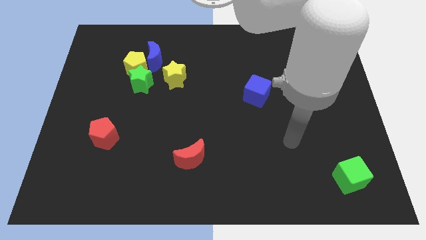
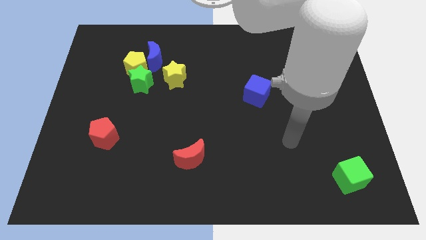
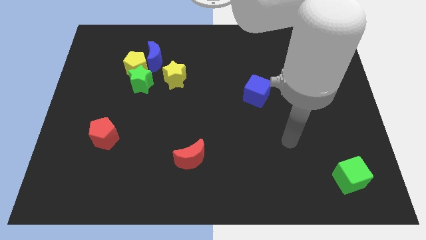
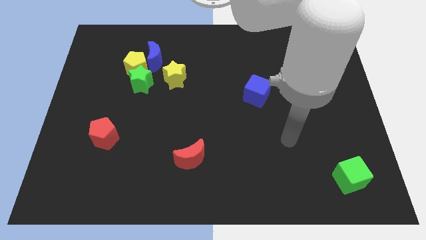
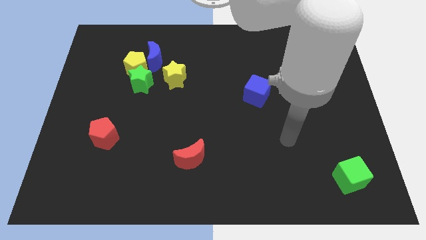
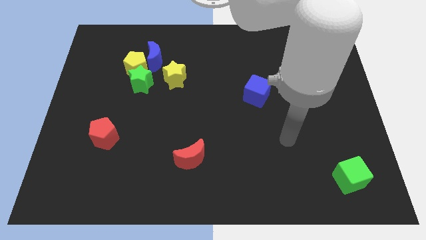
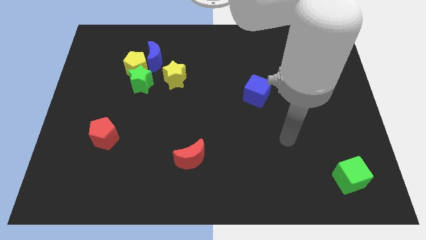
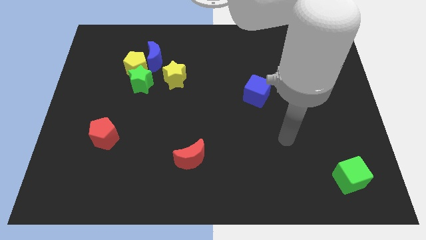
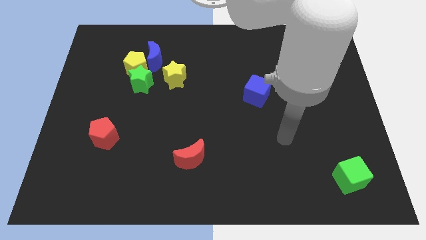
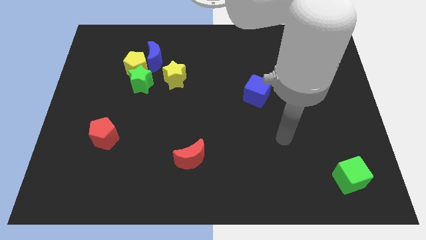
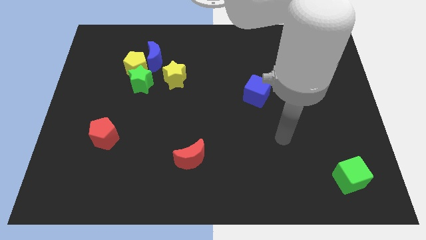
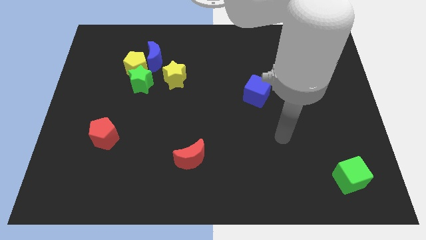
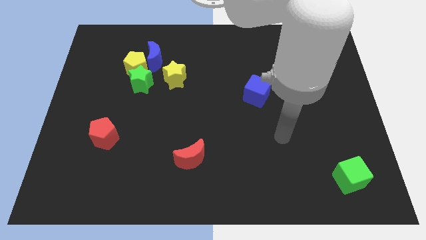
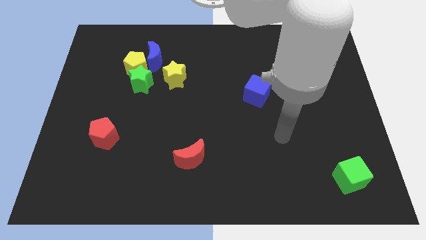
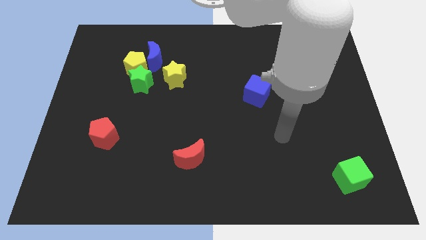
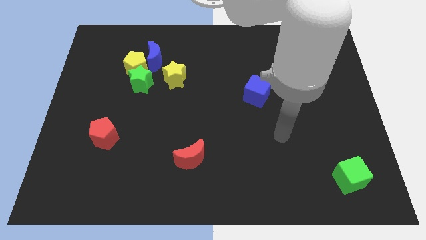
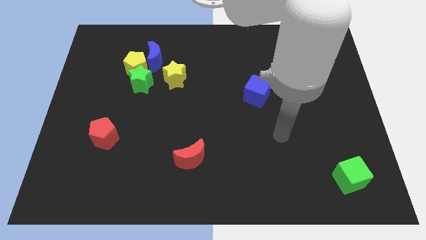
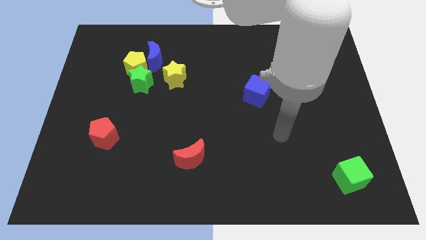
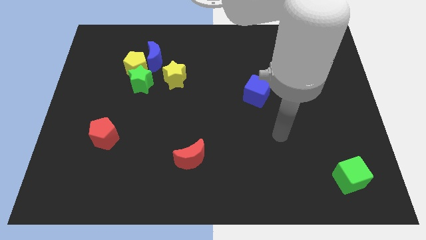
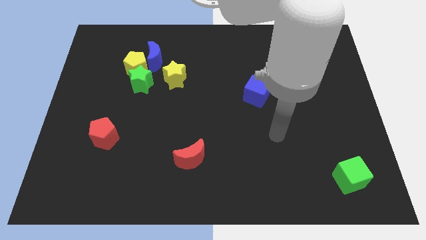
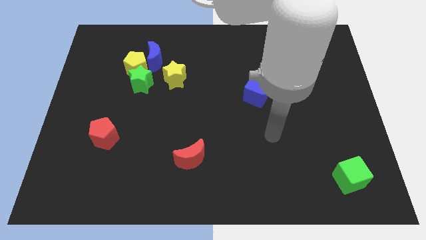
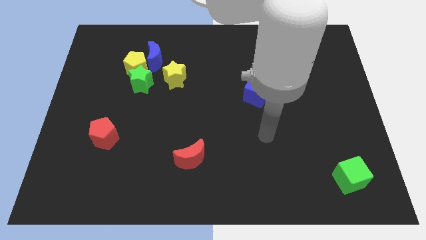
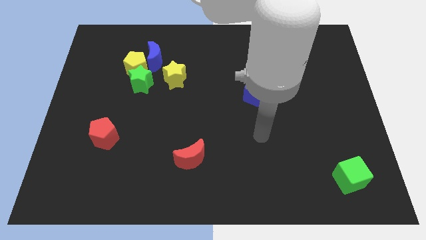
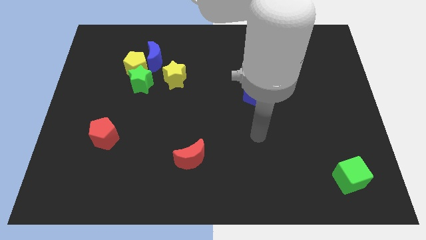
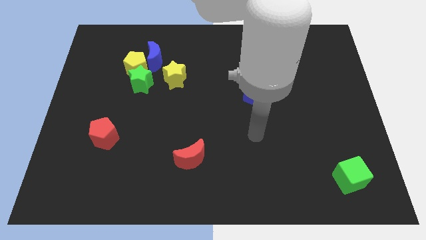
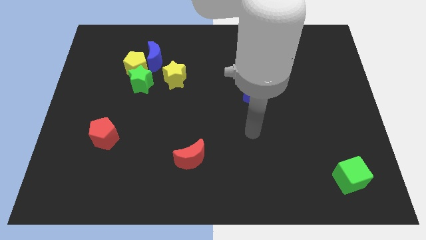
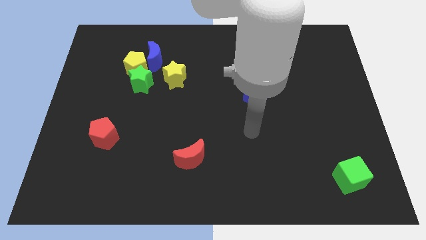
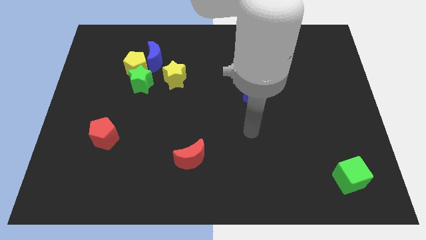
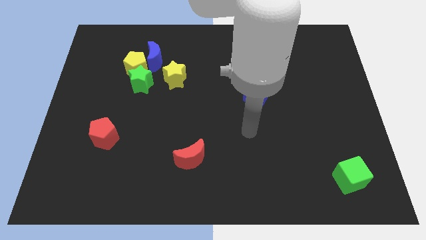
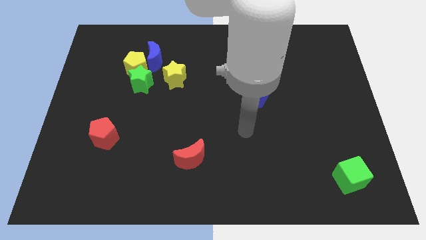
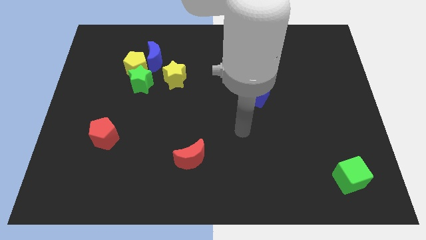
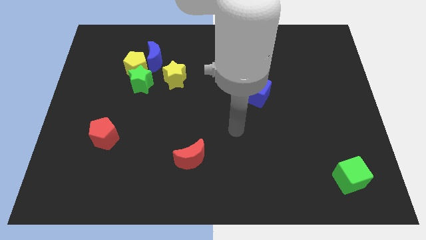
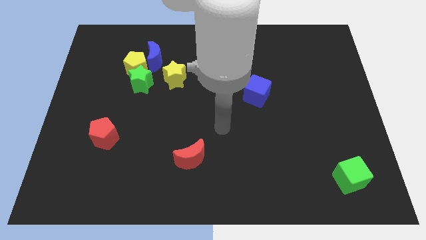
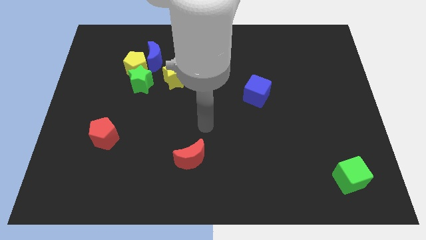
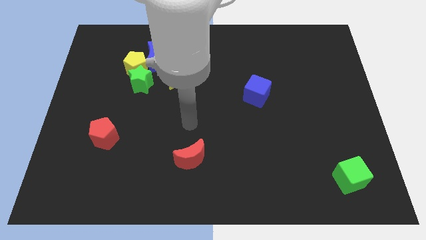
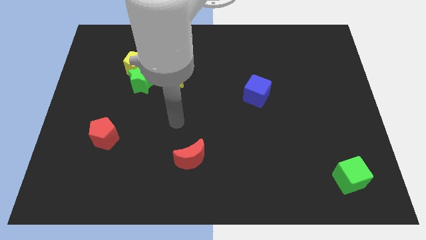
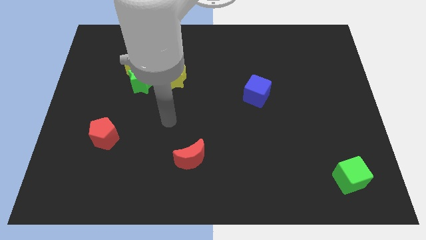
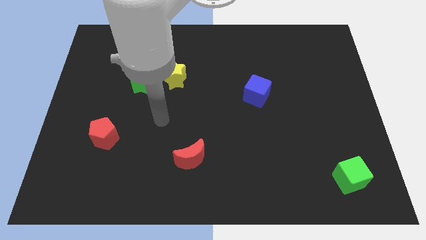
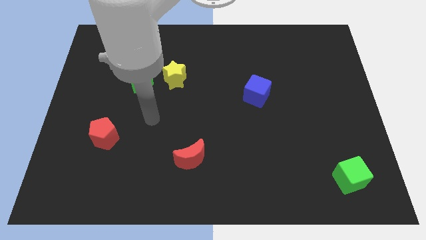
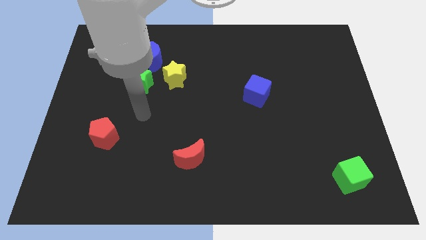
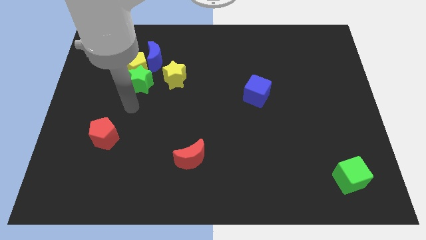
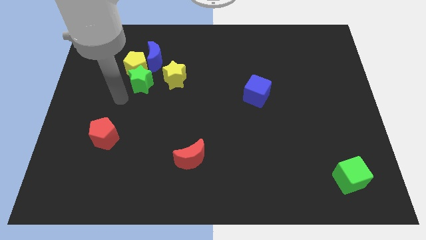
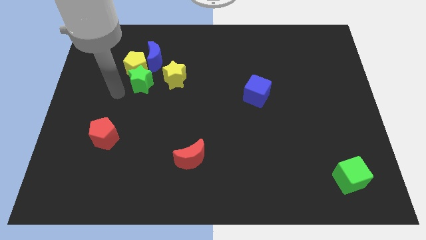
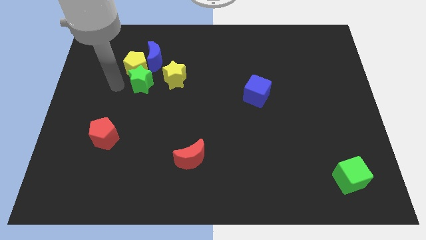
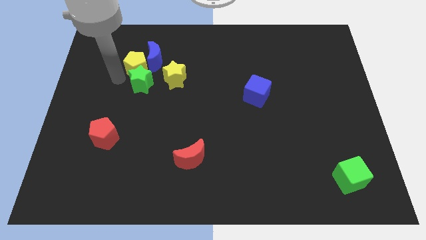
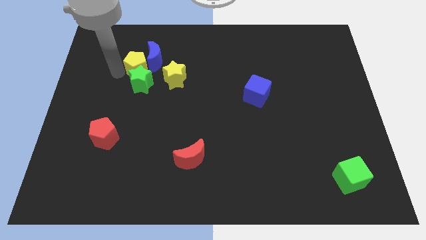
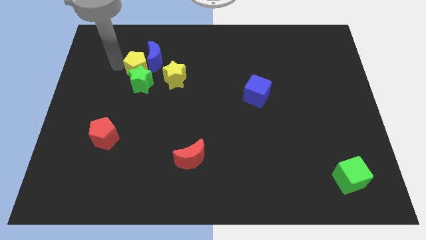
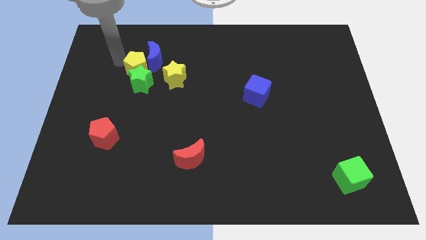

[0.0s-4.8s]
place the arm to the left side of the yellow pentagon

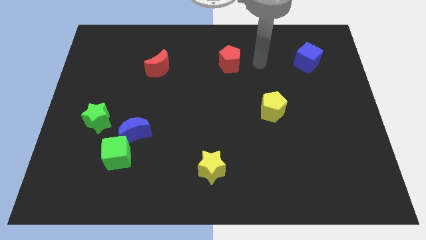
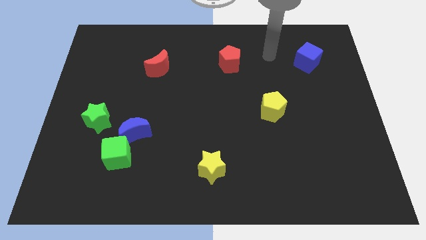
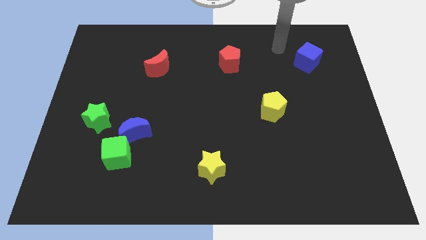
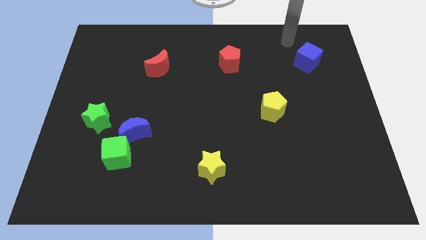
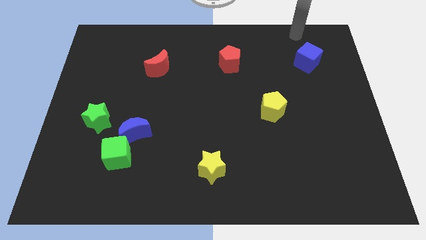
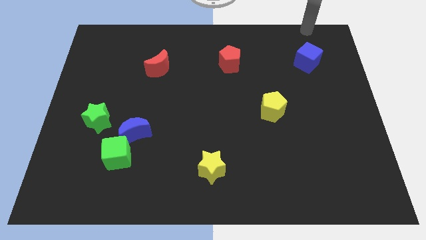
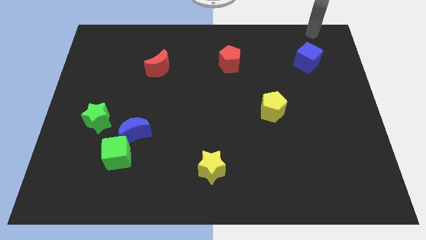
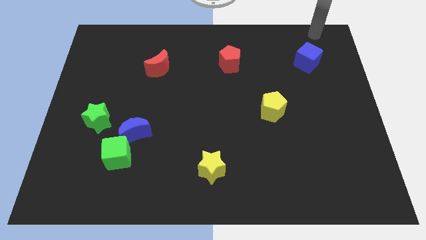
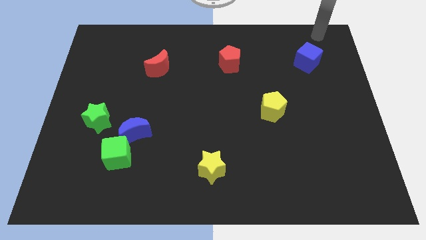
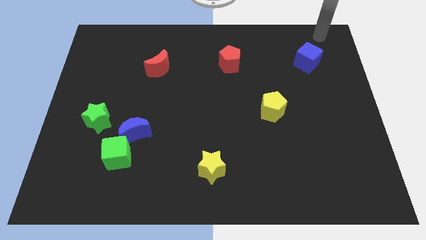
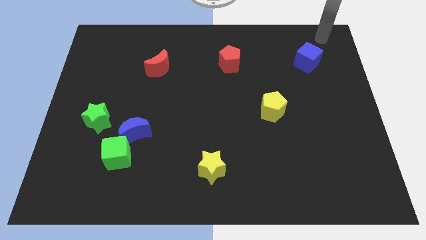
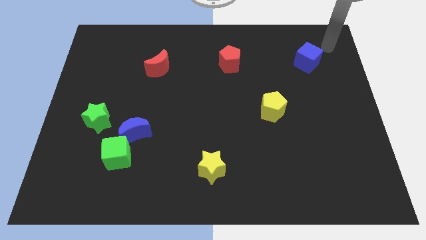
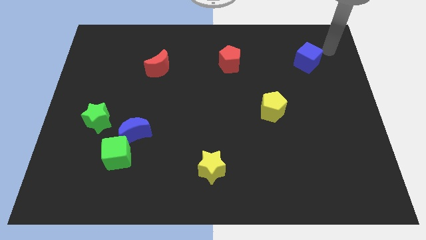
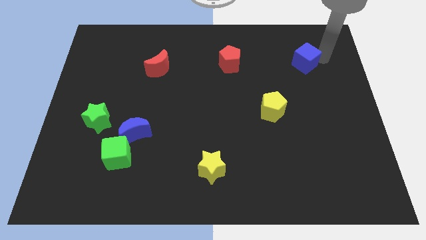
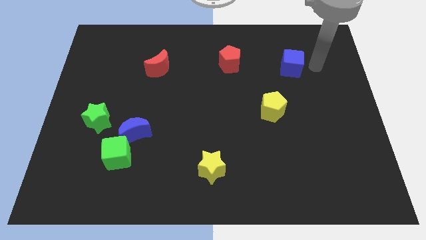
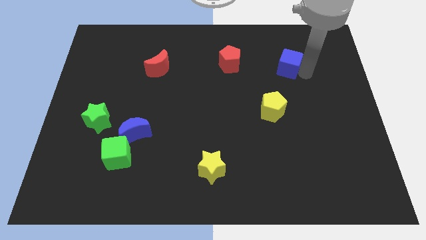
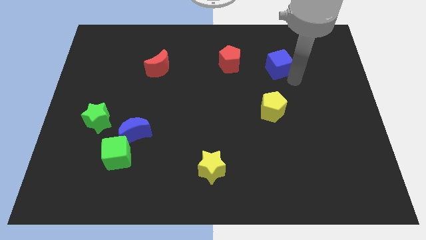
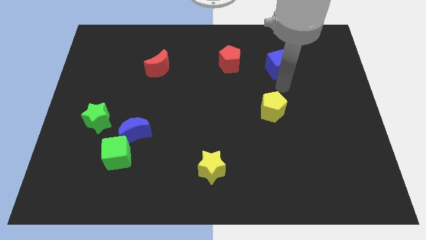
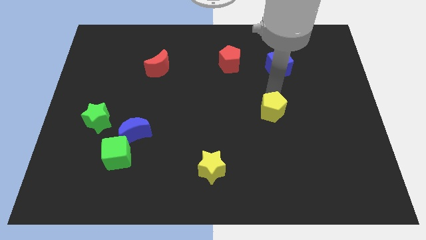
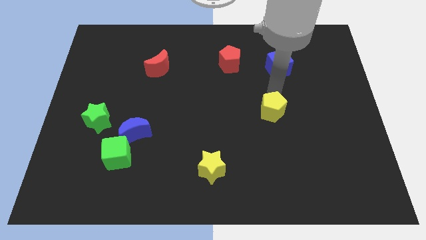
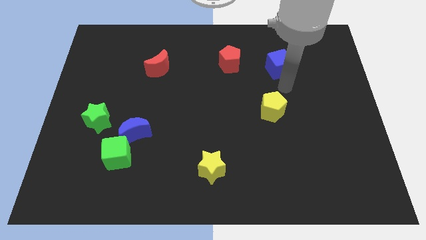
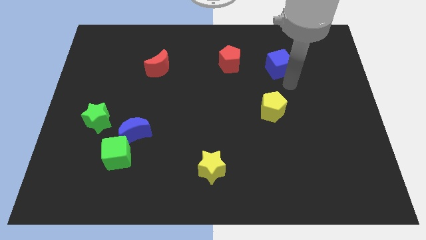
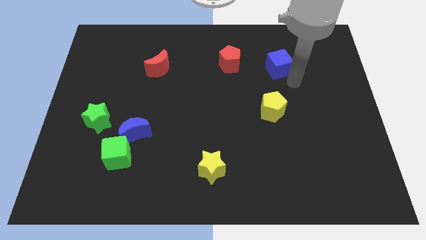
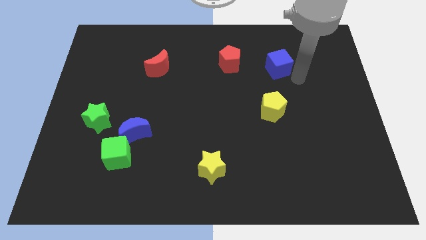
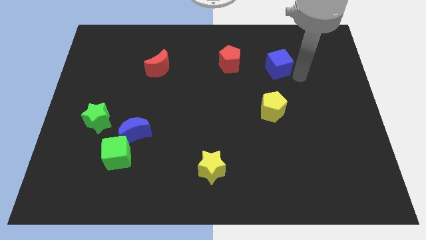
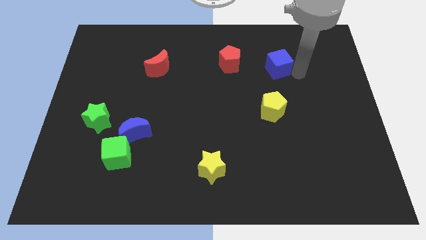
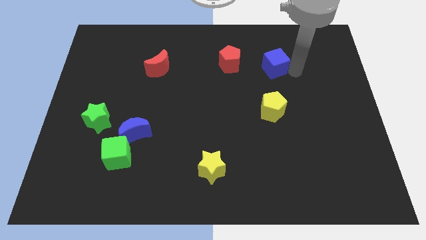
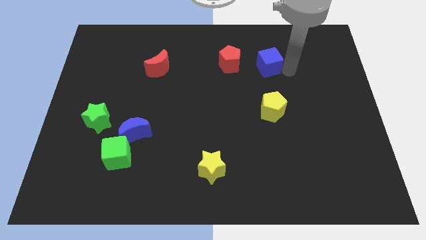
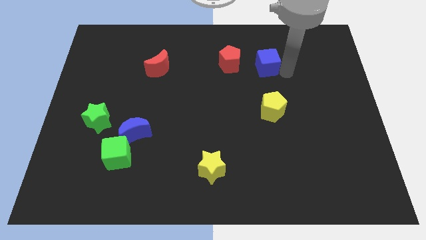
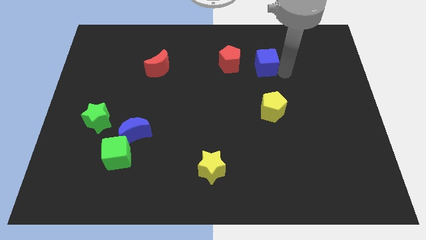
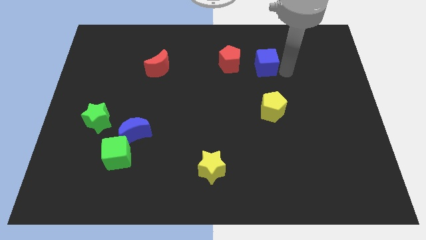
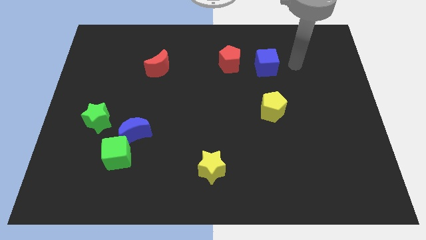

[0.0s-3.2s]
move the blue cube adjacent to the red pentagon

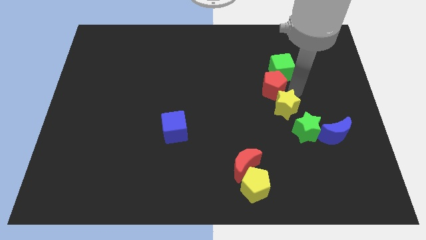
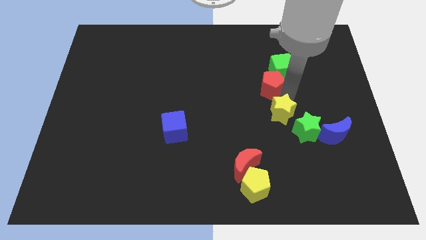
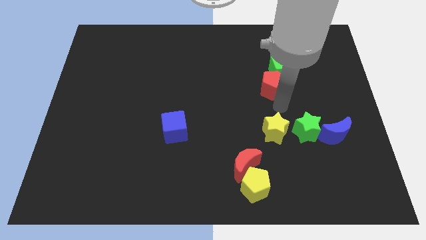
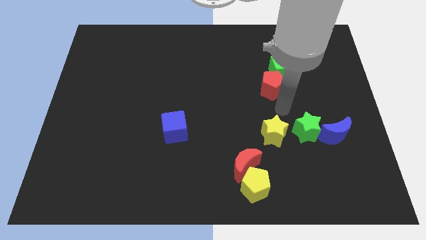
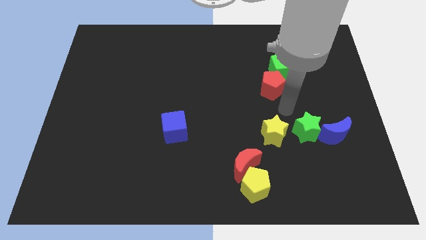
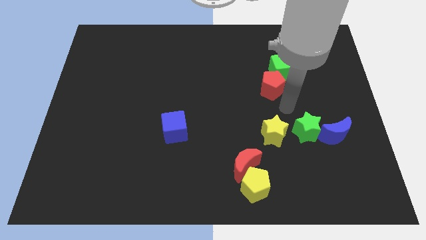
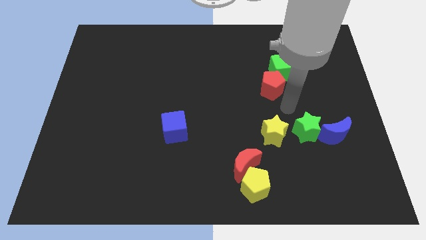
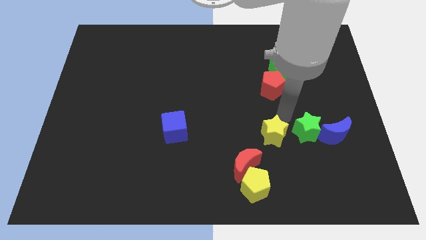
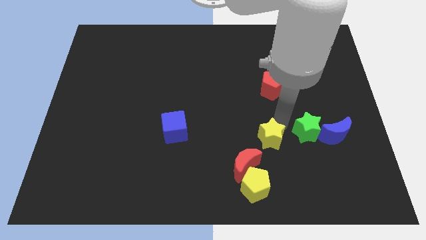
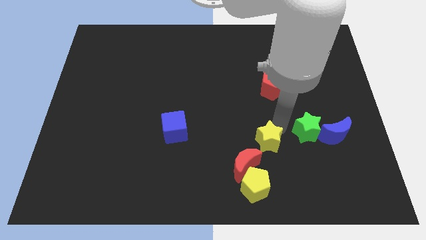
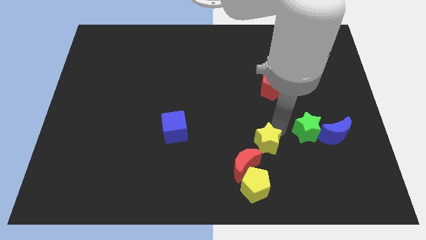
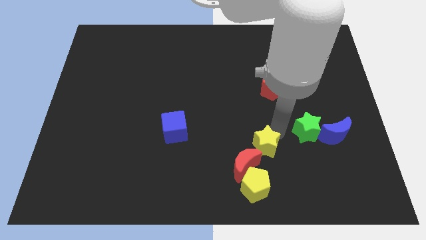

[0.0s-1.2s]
separate the yellow star from the red pentagon
